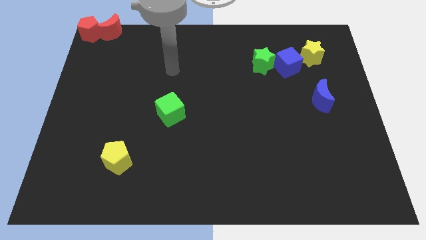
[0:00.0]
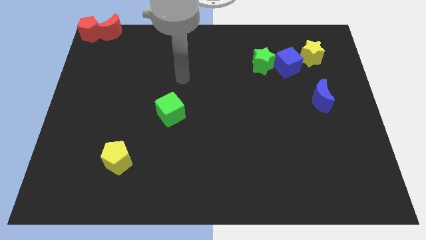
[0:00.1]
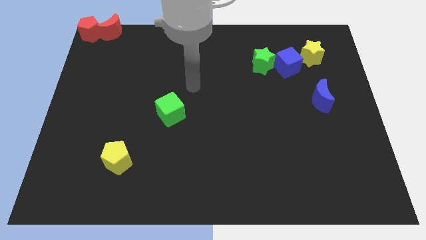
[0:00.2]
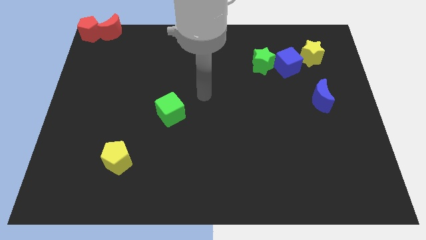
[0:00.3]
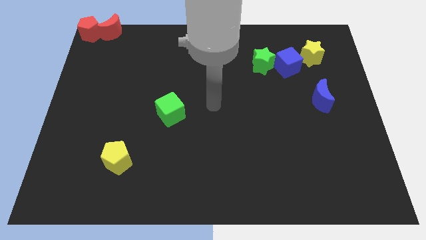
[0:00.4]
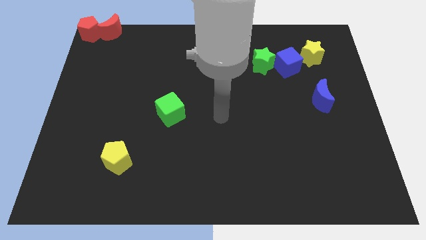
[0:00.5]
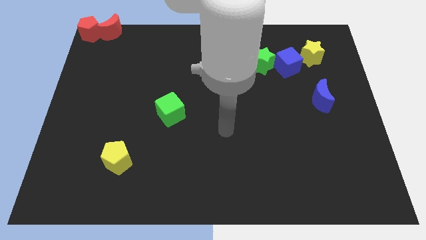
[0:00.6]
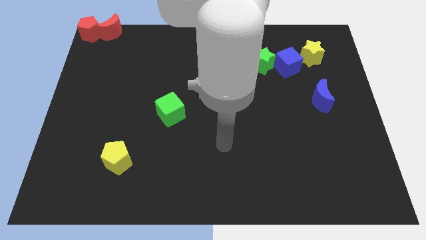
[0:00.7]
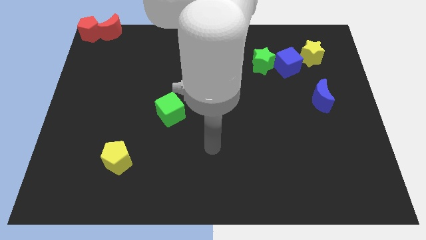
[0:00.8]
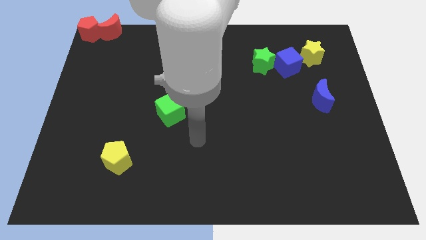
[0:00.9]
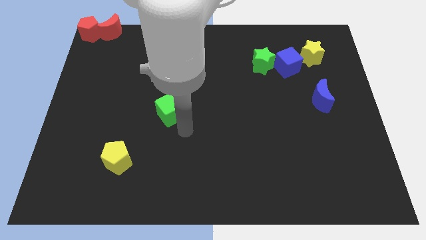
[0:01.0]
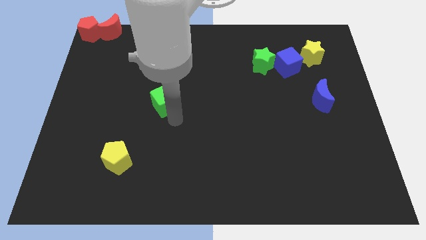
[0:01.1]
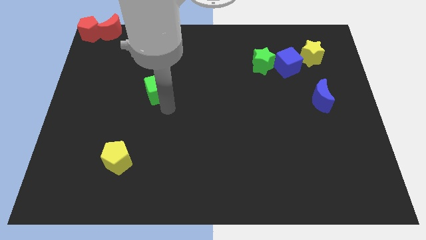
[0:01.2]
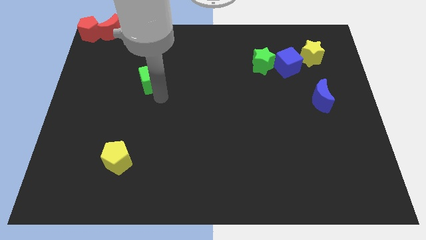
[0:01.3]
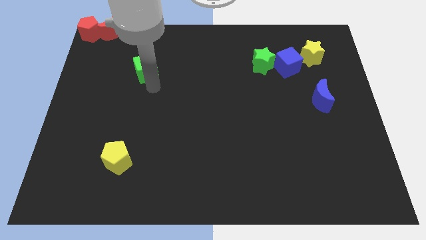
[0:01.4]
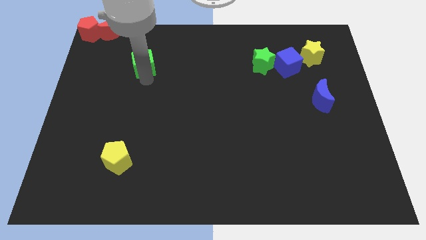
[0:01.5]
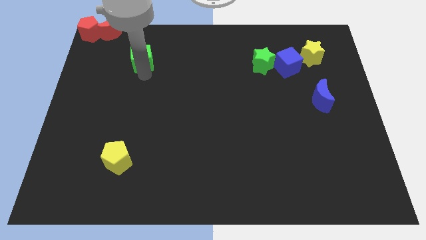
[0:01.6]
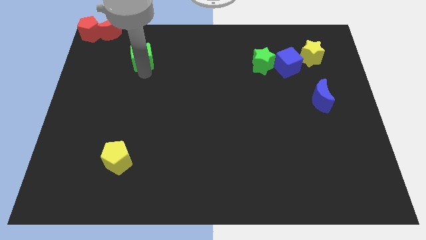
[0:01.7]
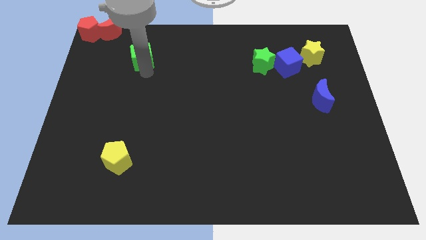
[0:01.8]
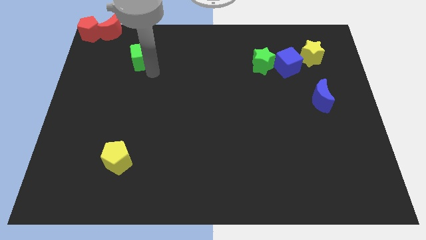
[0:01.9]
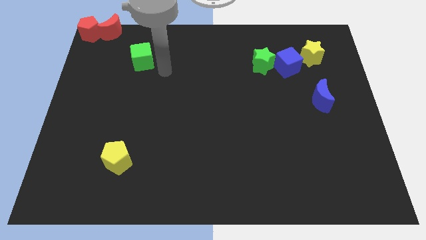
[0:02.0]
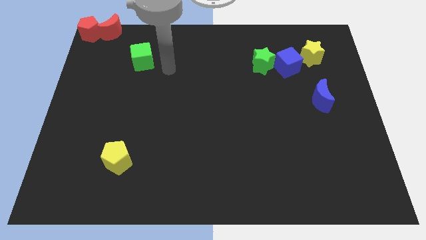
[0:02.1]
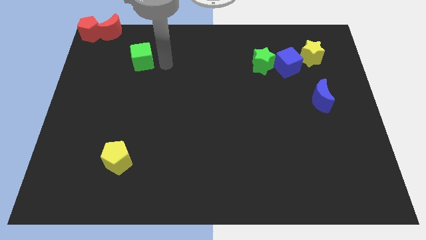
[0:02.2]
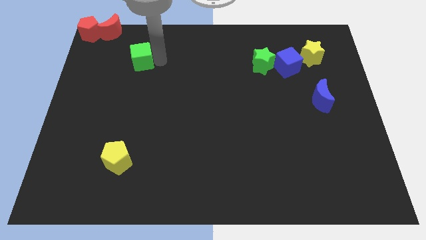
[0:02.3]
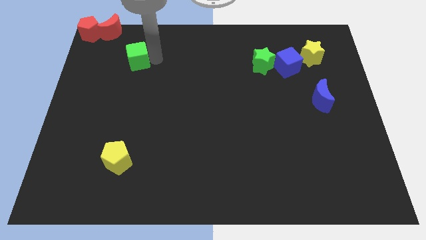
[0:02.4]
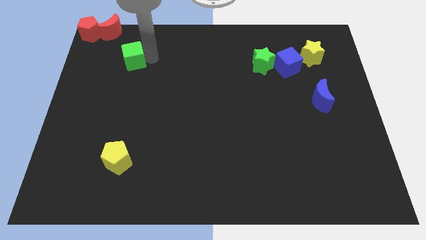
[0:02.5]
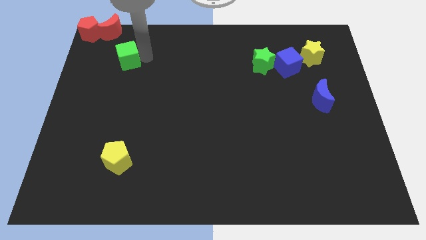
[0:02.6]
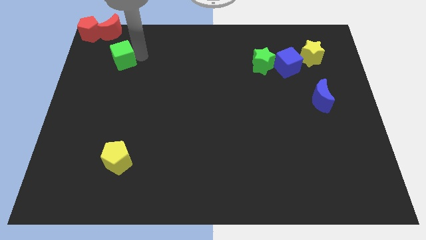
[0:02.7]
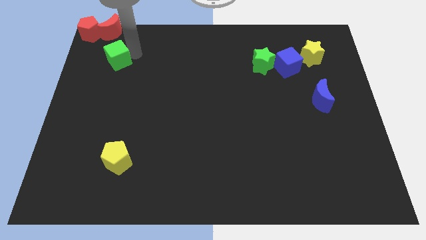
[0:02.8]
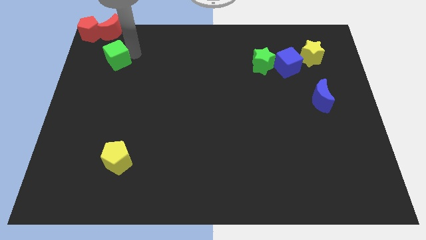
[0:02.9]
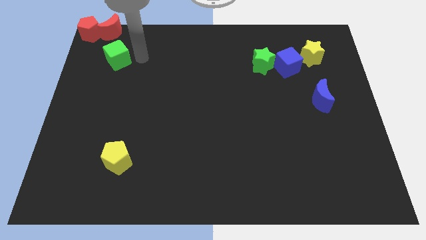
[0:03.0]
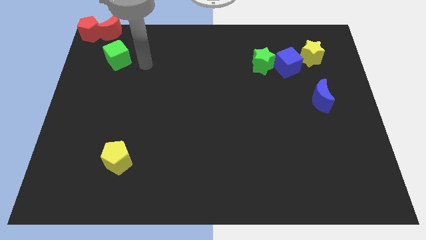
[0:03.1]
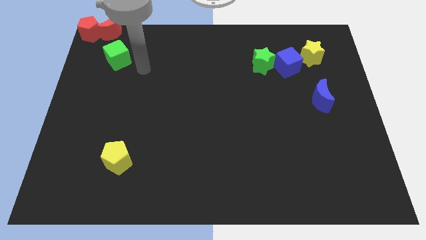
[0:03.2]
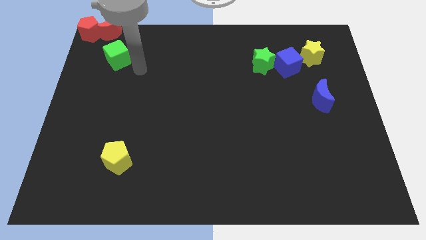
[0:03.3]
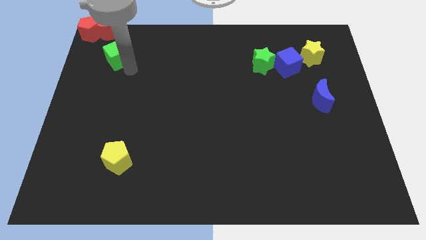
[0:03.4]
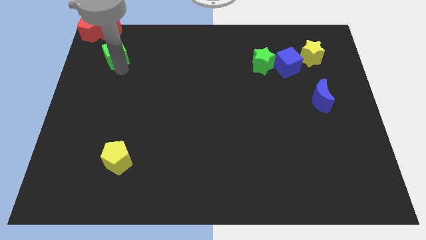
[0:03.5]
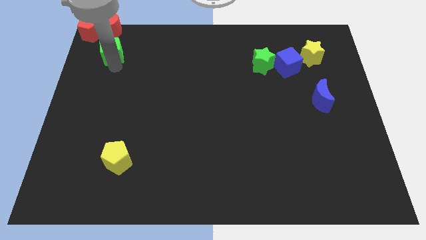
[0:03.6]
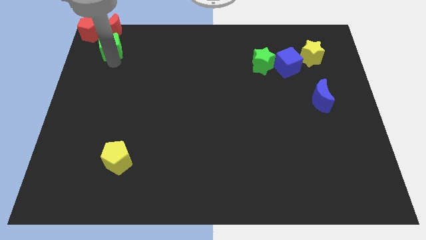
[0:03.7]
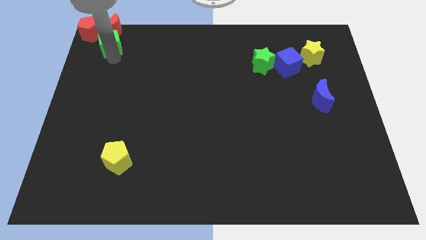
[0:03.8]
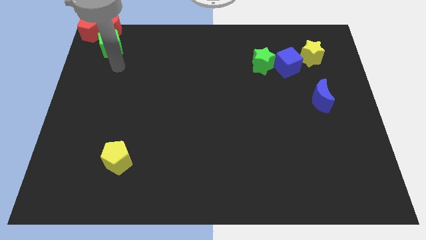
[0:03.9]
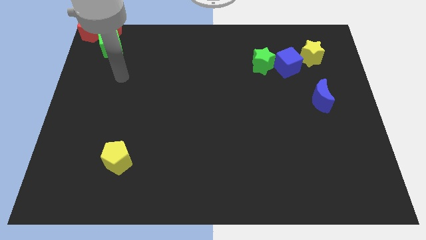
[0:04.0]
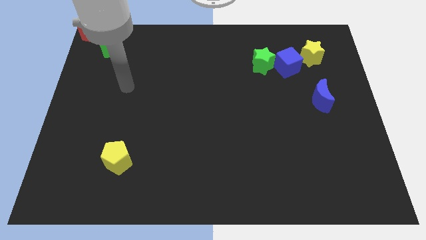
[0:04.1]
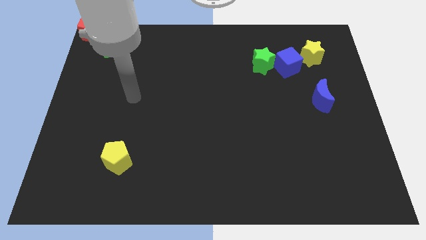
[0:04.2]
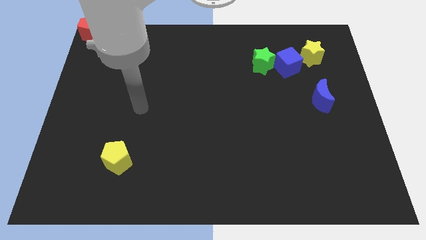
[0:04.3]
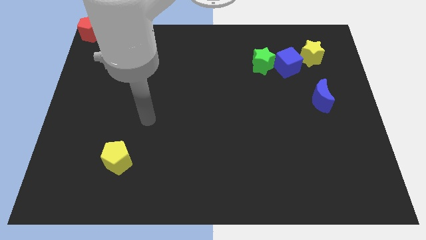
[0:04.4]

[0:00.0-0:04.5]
push the green cube into the red crescent

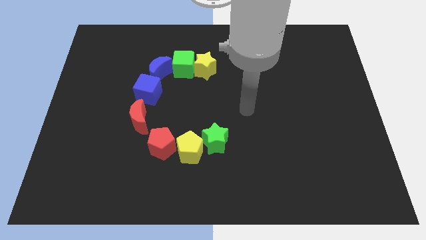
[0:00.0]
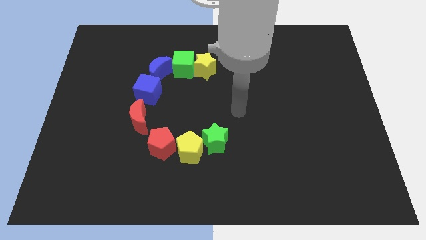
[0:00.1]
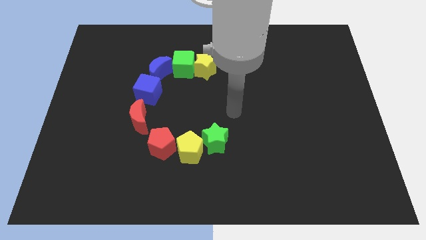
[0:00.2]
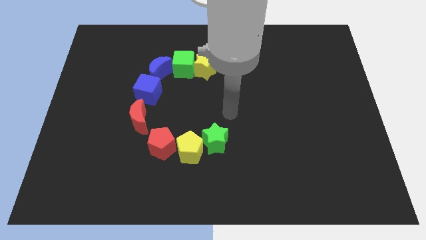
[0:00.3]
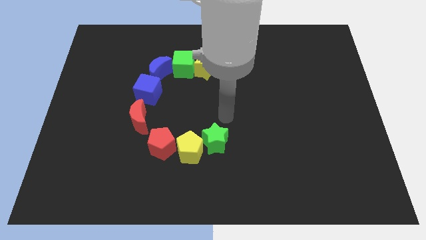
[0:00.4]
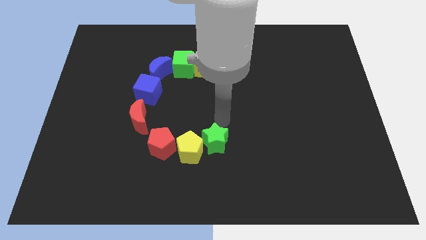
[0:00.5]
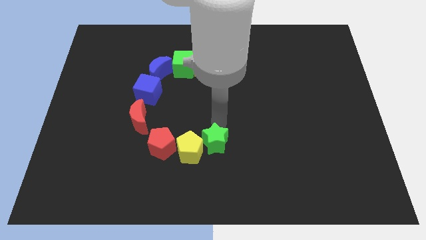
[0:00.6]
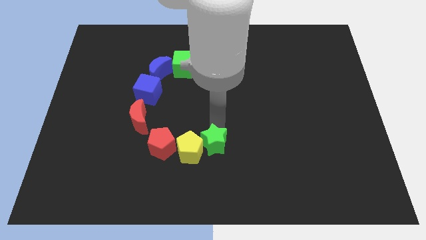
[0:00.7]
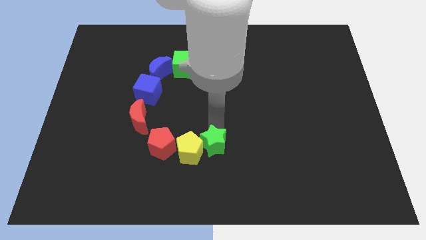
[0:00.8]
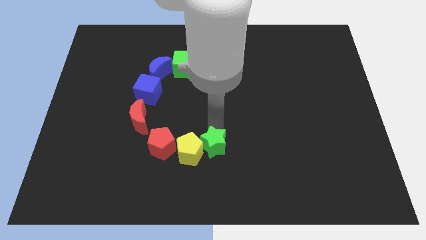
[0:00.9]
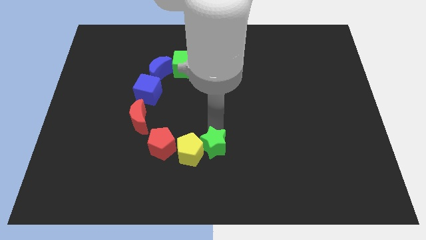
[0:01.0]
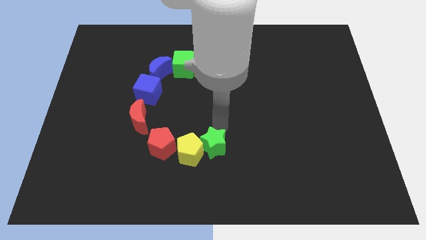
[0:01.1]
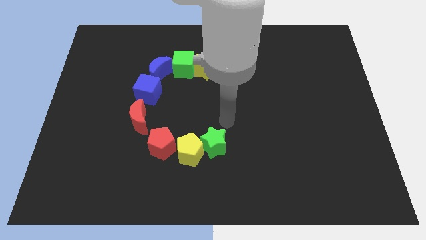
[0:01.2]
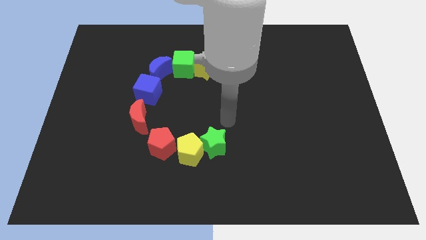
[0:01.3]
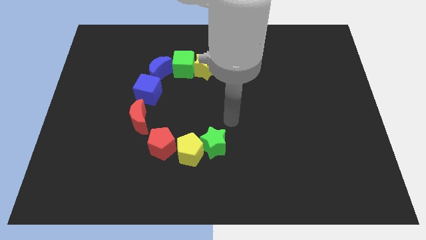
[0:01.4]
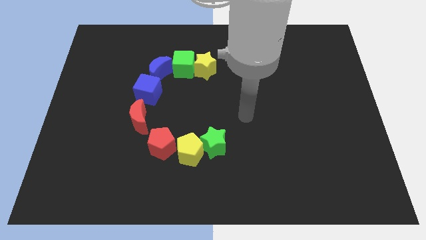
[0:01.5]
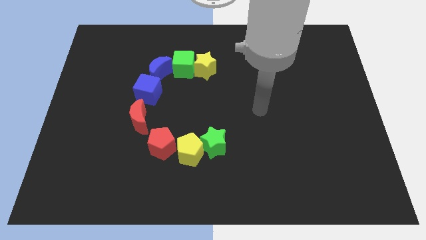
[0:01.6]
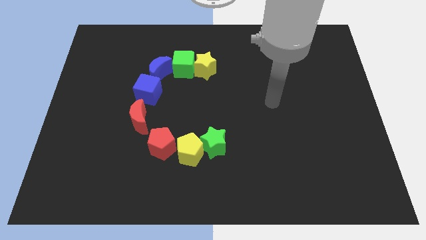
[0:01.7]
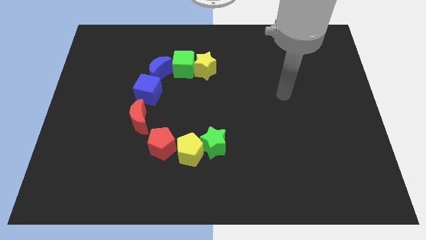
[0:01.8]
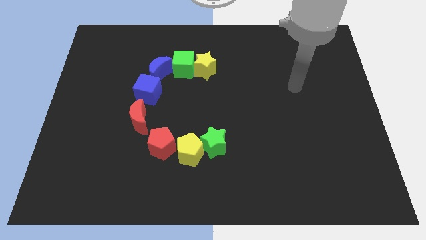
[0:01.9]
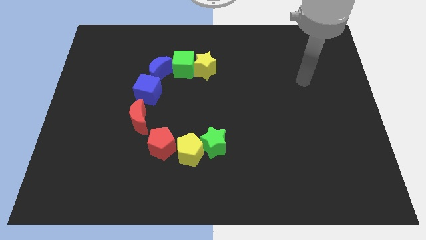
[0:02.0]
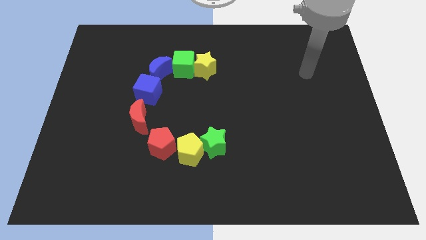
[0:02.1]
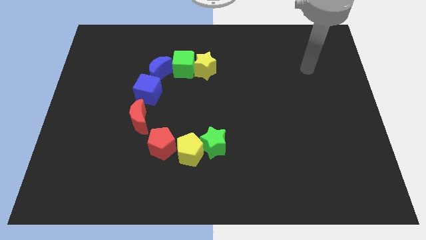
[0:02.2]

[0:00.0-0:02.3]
move the arm to the above right side of the board

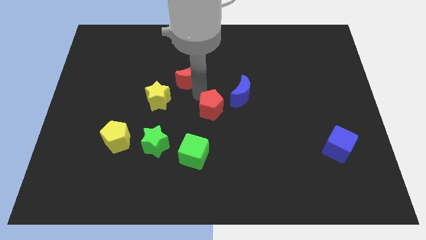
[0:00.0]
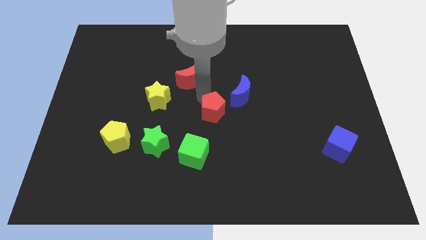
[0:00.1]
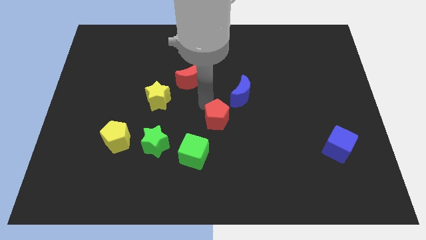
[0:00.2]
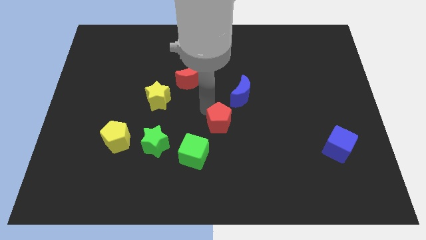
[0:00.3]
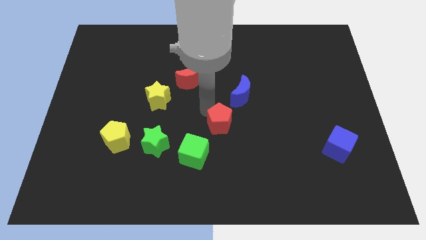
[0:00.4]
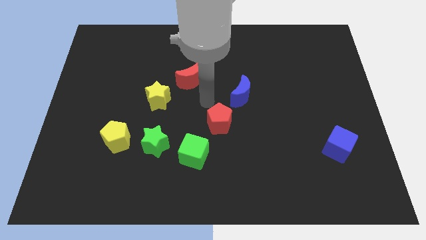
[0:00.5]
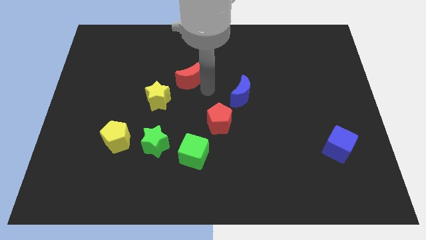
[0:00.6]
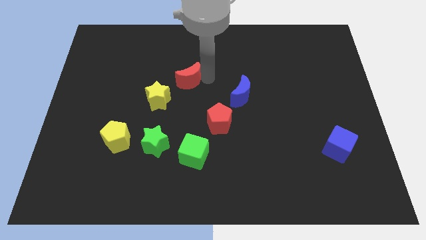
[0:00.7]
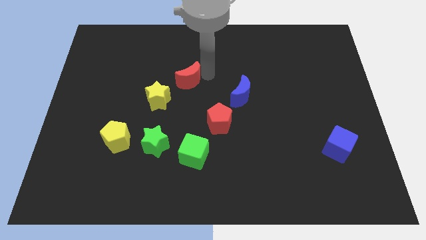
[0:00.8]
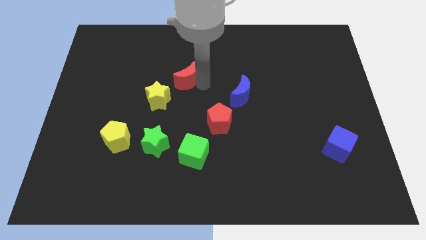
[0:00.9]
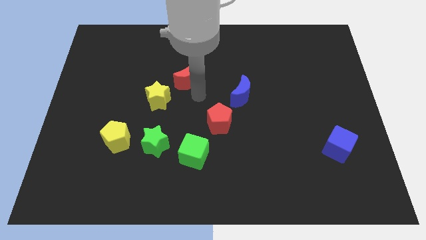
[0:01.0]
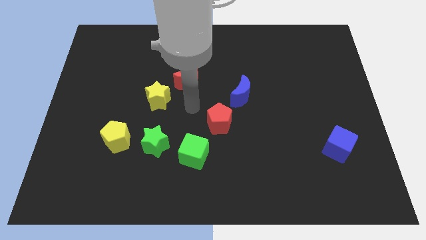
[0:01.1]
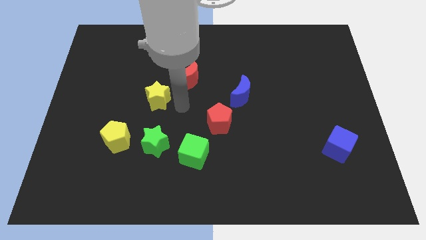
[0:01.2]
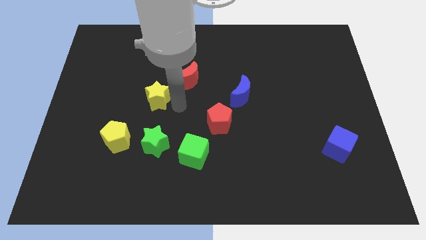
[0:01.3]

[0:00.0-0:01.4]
slightly move the red pentagon downwards

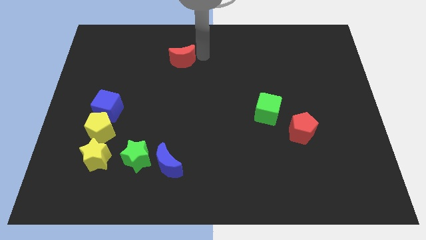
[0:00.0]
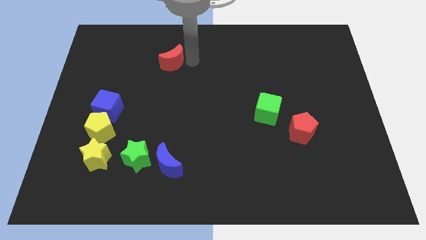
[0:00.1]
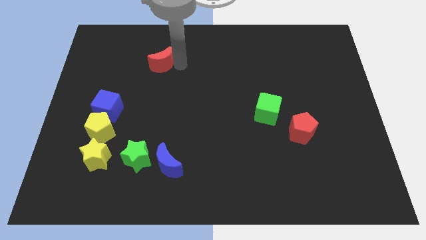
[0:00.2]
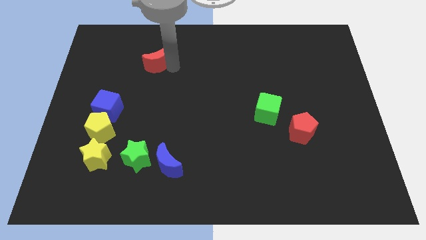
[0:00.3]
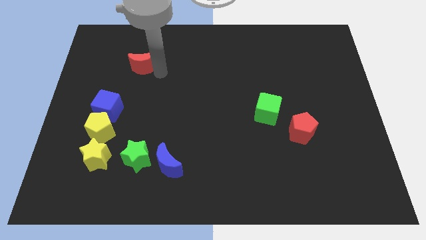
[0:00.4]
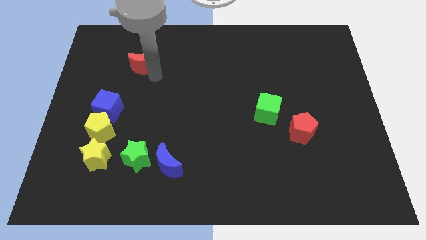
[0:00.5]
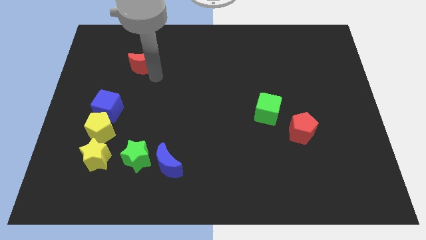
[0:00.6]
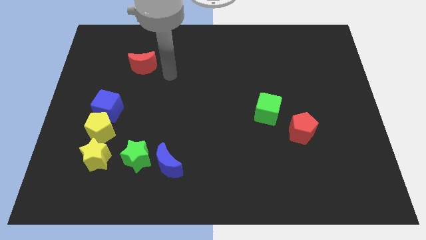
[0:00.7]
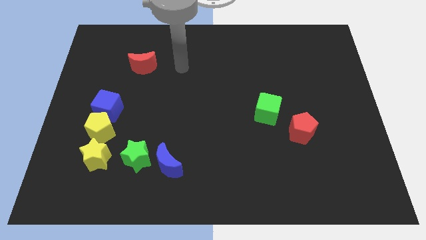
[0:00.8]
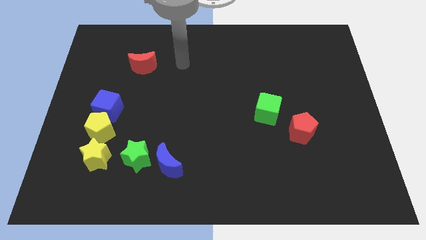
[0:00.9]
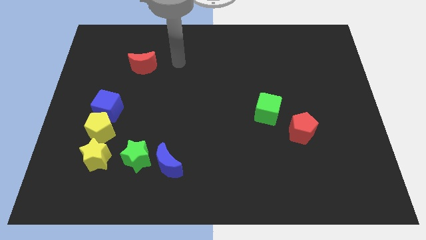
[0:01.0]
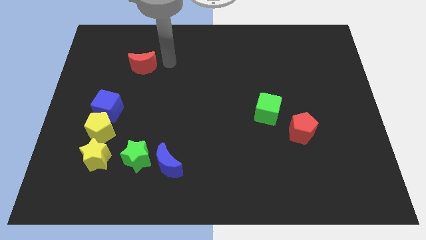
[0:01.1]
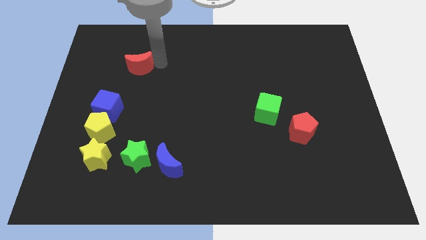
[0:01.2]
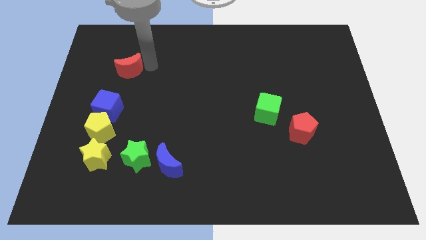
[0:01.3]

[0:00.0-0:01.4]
push red crescent towards blue cube
